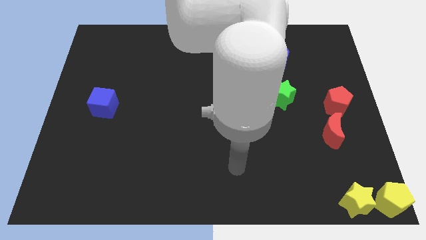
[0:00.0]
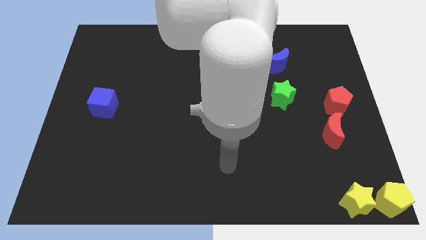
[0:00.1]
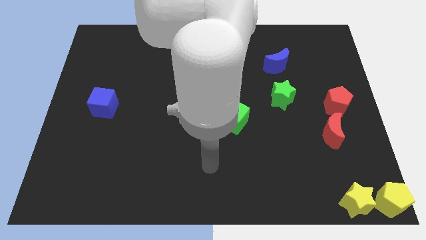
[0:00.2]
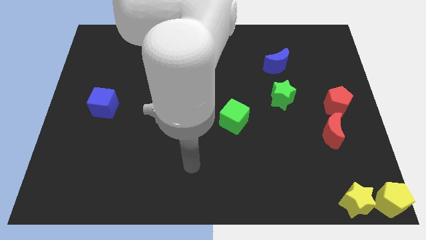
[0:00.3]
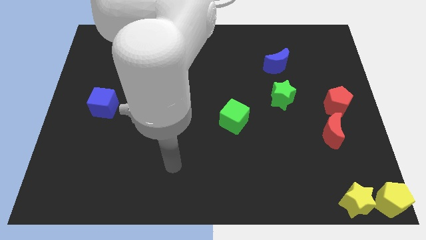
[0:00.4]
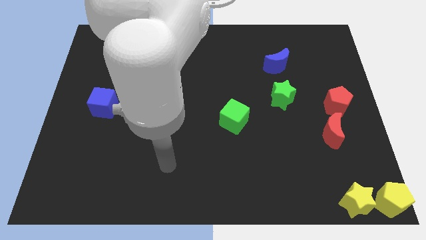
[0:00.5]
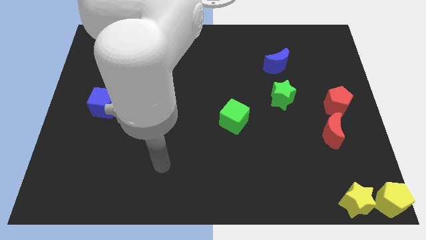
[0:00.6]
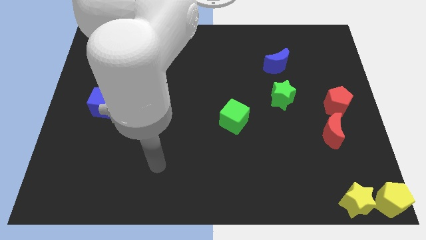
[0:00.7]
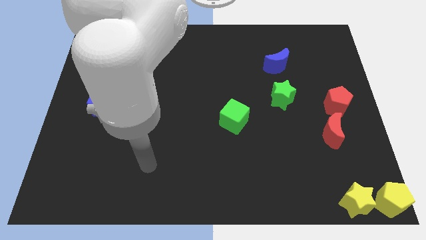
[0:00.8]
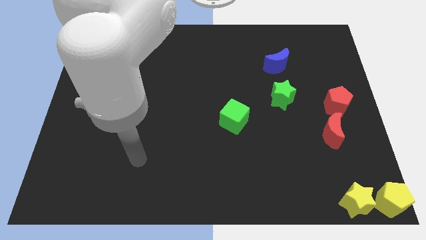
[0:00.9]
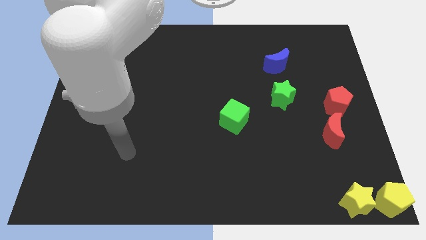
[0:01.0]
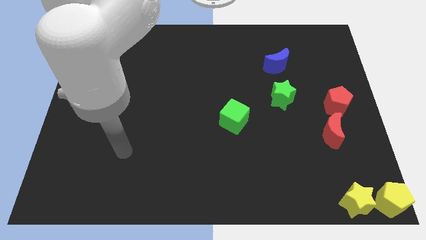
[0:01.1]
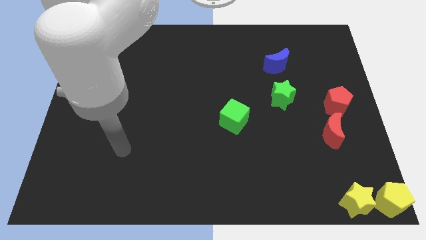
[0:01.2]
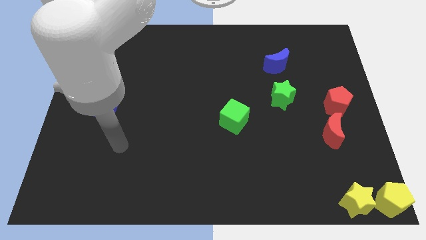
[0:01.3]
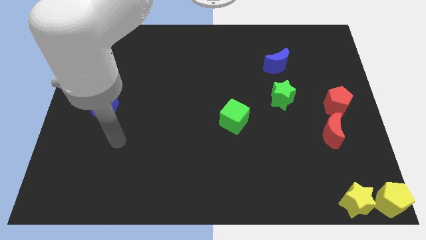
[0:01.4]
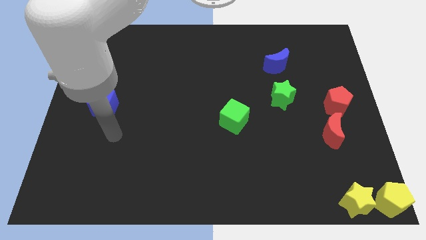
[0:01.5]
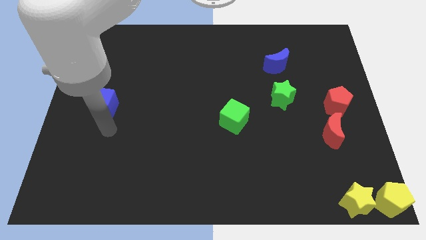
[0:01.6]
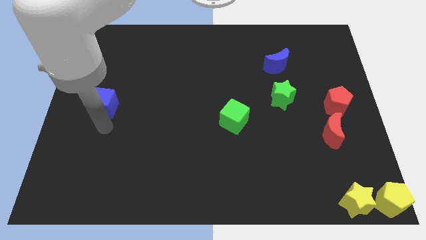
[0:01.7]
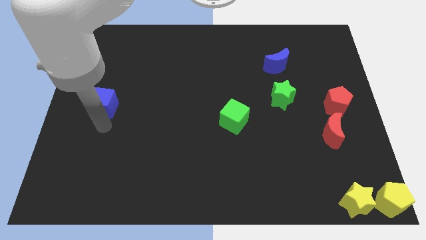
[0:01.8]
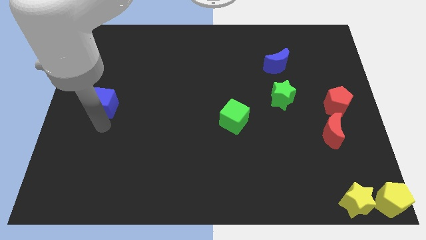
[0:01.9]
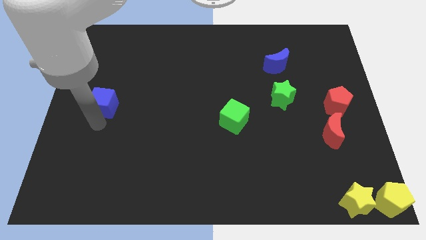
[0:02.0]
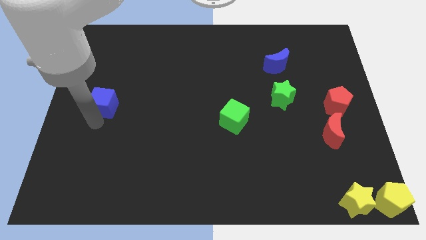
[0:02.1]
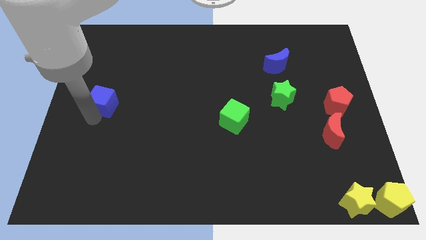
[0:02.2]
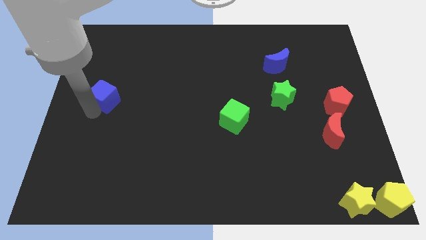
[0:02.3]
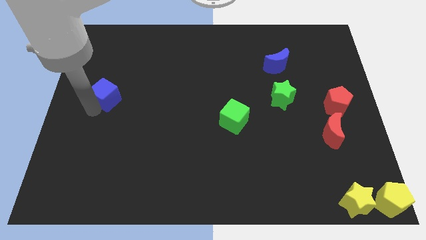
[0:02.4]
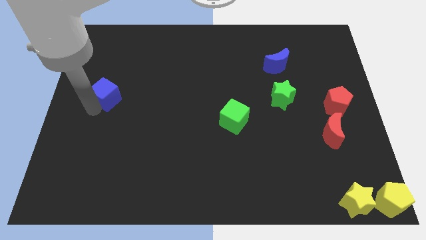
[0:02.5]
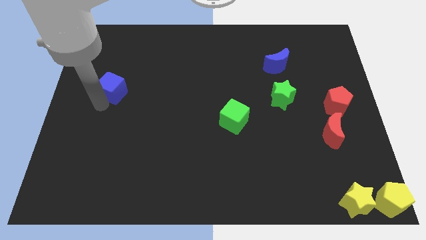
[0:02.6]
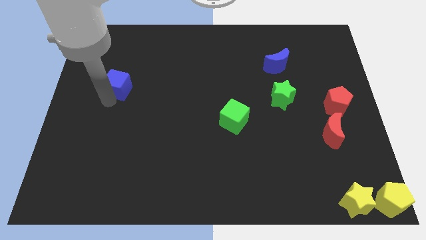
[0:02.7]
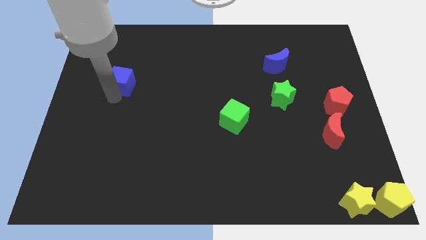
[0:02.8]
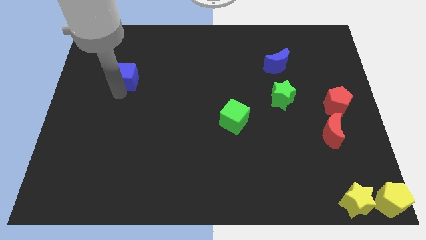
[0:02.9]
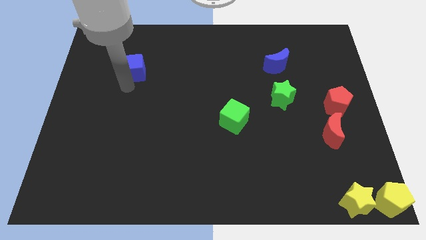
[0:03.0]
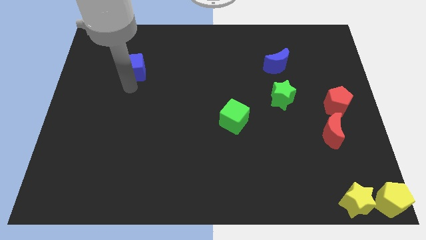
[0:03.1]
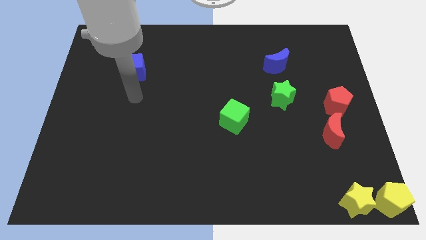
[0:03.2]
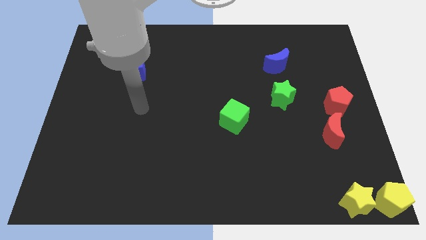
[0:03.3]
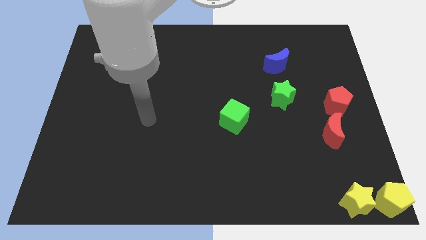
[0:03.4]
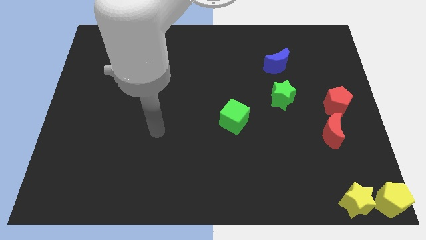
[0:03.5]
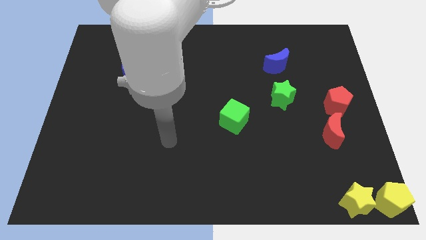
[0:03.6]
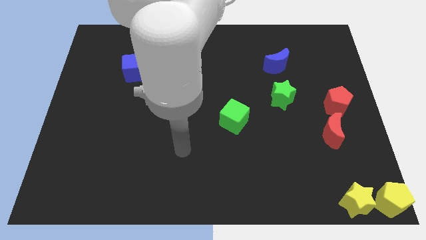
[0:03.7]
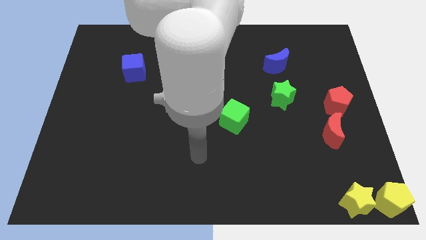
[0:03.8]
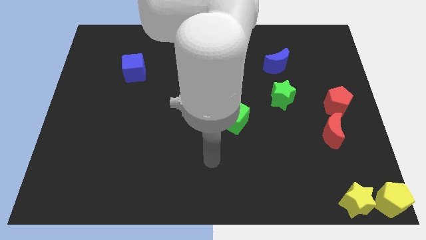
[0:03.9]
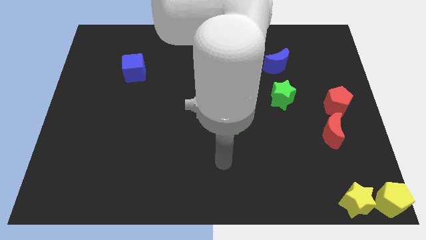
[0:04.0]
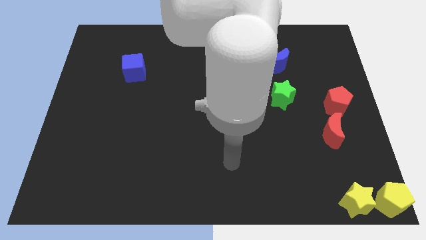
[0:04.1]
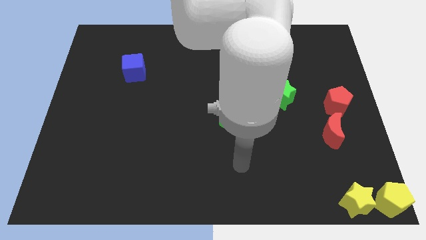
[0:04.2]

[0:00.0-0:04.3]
move the blue cube diagonally to the top left of the green cube

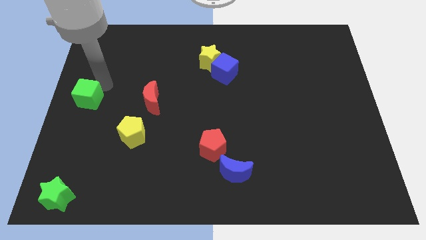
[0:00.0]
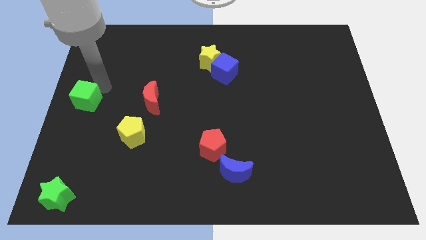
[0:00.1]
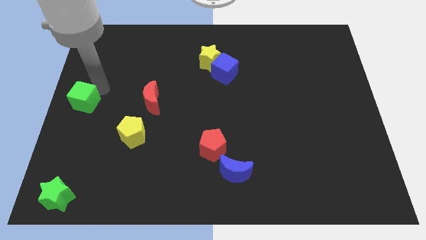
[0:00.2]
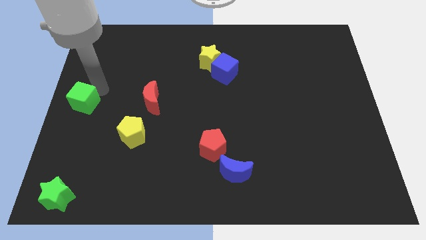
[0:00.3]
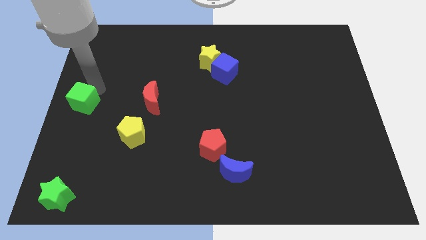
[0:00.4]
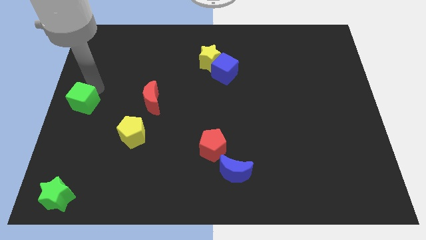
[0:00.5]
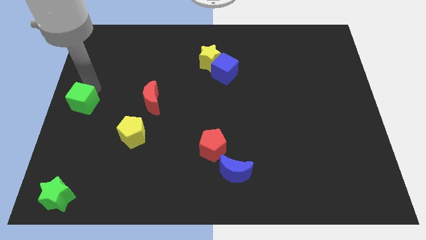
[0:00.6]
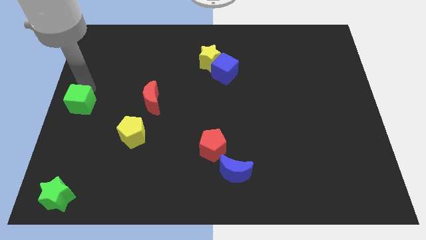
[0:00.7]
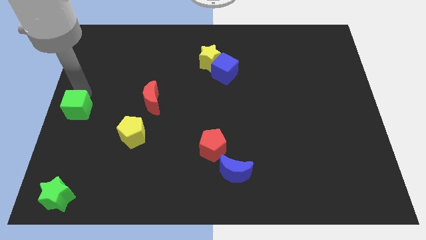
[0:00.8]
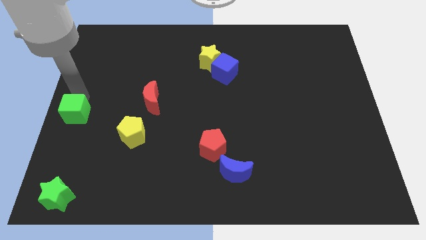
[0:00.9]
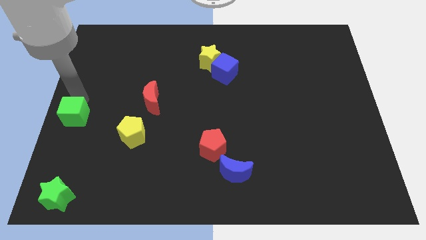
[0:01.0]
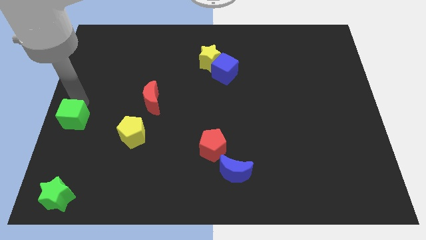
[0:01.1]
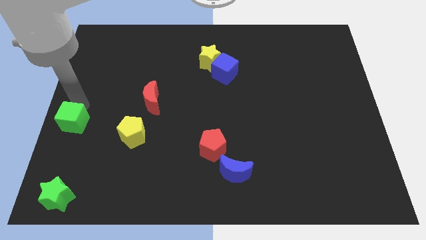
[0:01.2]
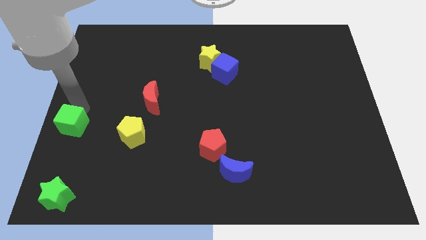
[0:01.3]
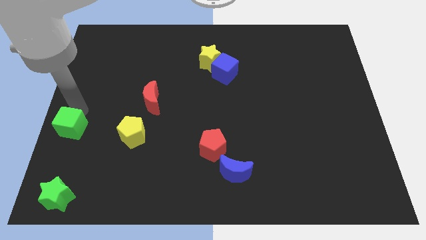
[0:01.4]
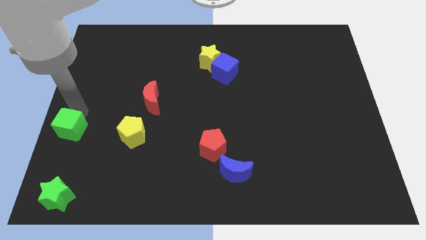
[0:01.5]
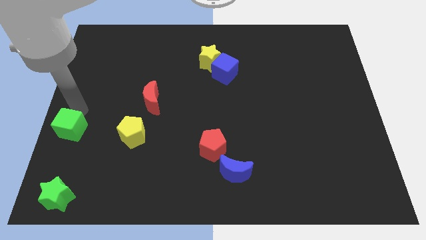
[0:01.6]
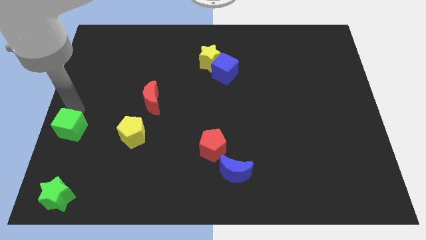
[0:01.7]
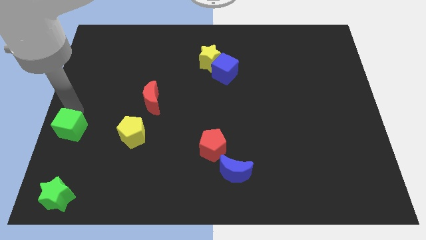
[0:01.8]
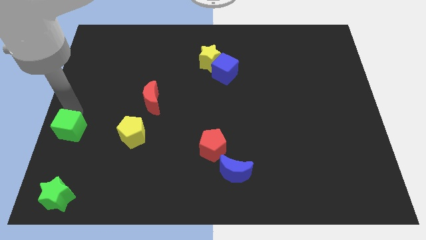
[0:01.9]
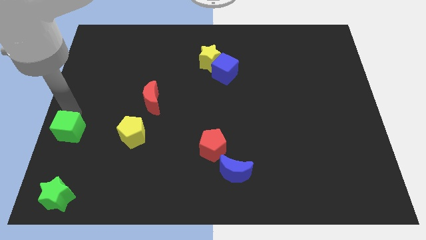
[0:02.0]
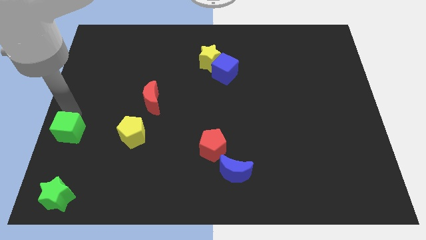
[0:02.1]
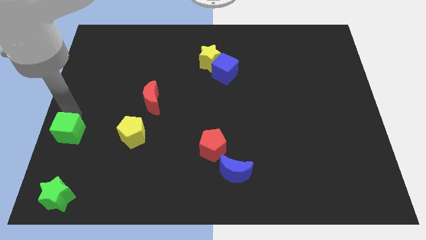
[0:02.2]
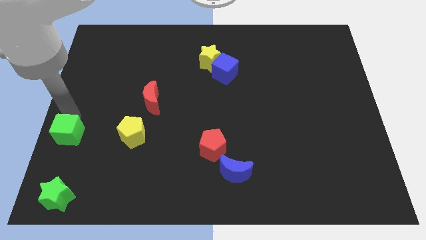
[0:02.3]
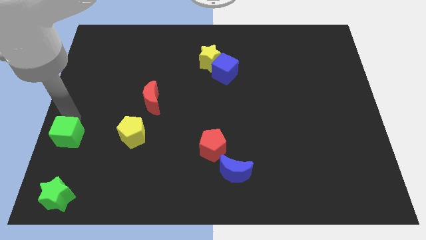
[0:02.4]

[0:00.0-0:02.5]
place the green cube vertically above the green star

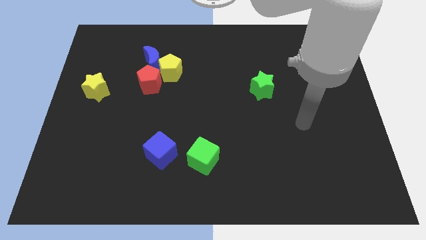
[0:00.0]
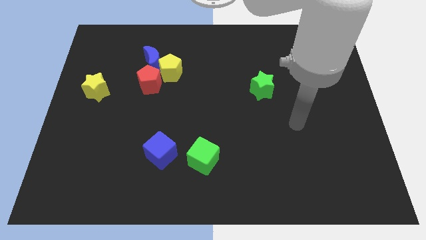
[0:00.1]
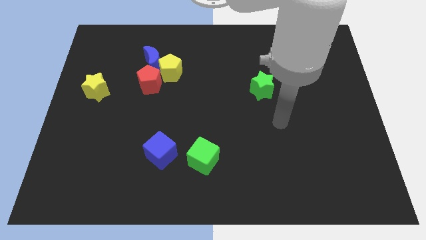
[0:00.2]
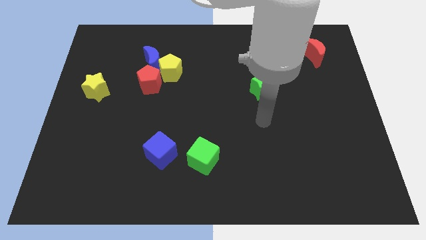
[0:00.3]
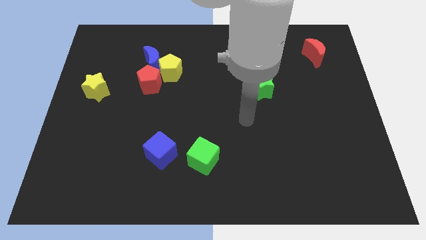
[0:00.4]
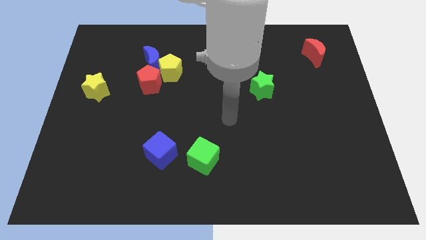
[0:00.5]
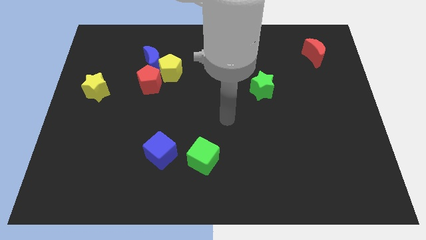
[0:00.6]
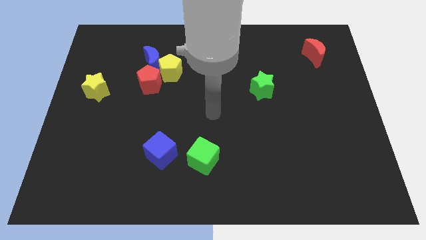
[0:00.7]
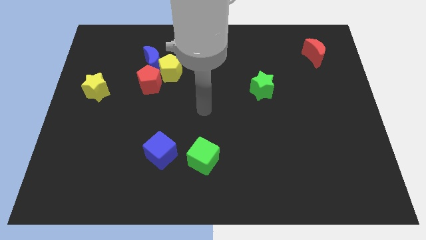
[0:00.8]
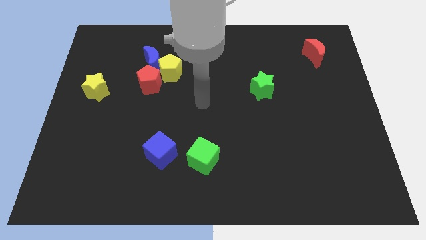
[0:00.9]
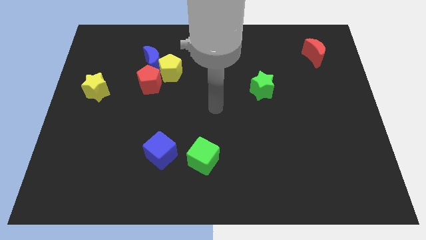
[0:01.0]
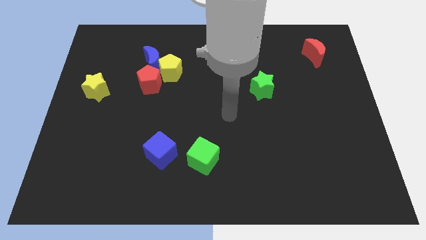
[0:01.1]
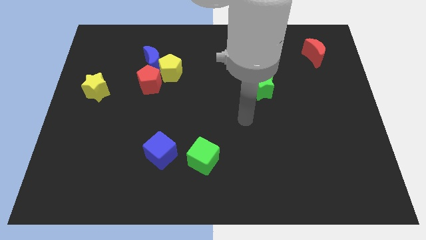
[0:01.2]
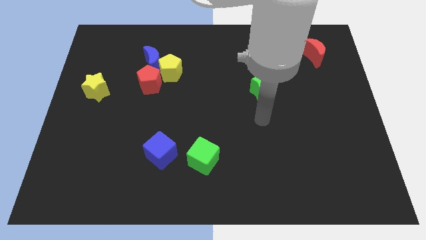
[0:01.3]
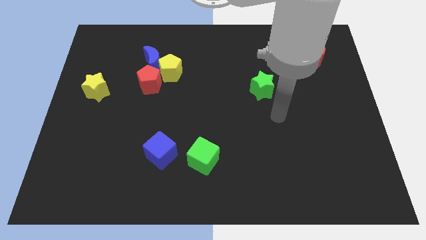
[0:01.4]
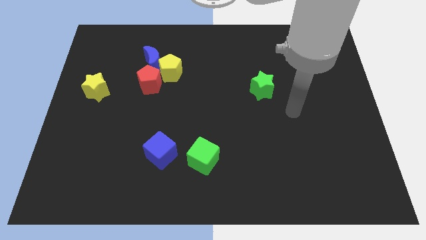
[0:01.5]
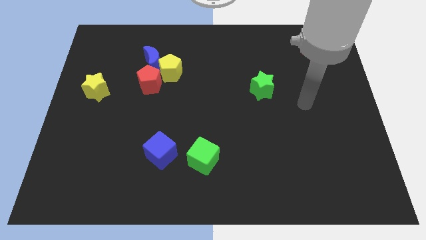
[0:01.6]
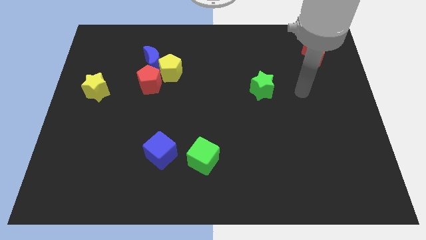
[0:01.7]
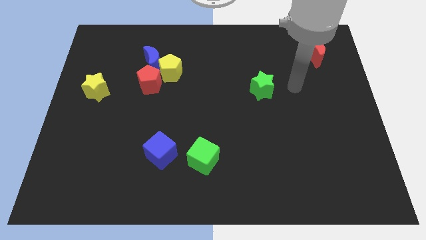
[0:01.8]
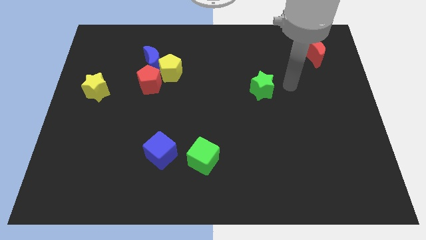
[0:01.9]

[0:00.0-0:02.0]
point your arm at the right side of the green star
